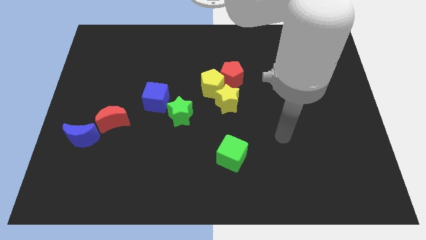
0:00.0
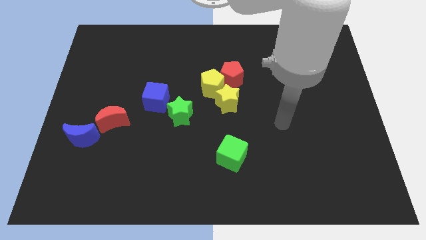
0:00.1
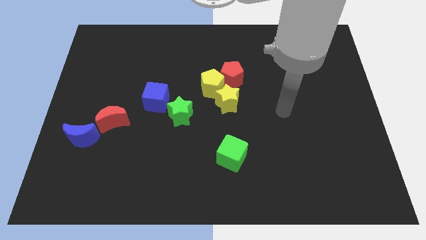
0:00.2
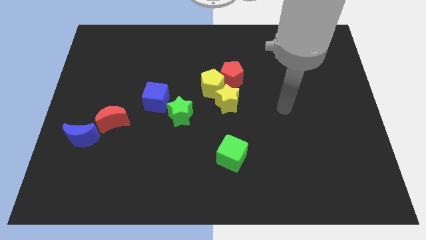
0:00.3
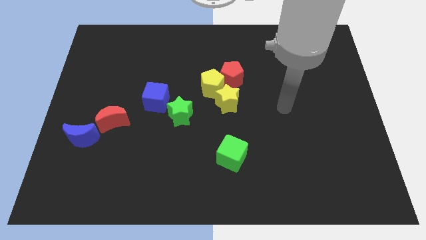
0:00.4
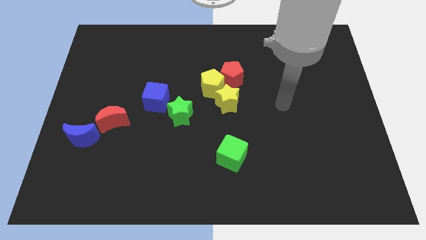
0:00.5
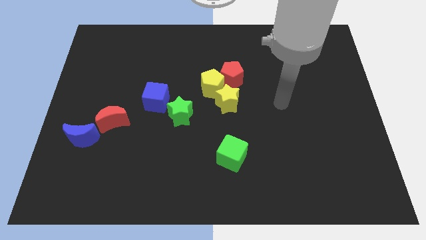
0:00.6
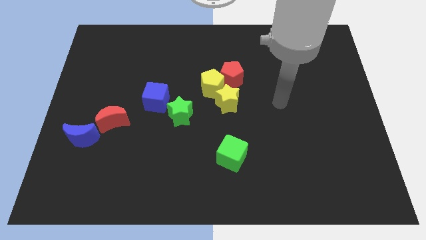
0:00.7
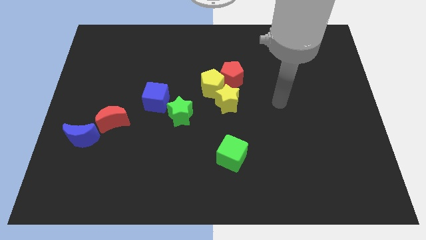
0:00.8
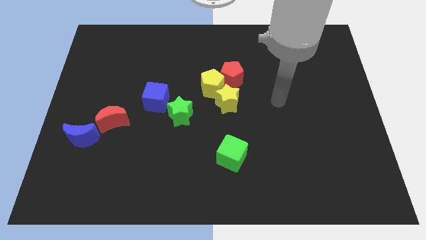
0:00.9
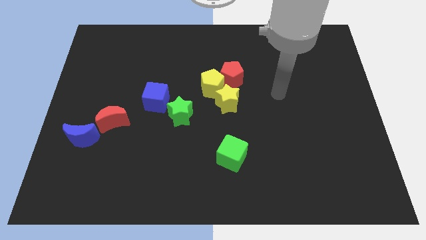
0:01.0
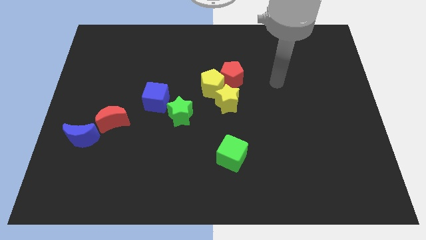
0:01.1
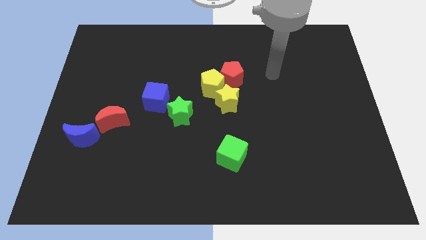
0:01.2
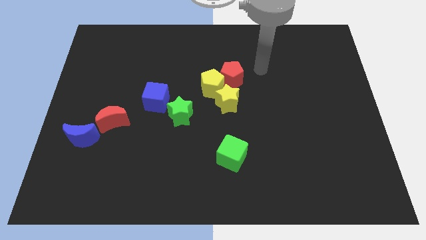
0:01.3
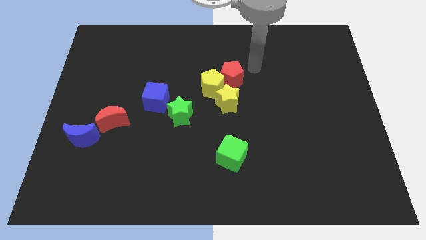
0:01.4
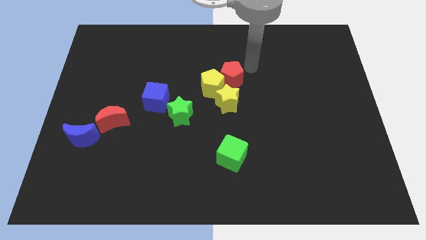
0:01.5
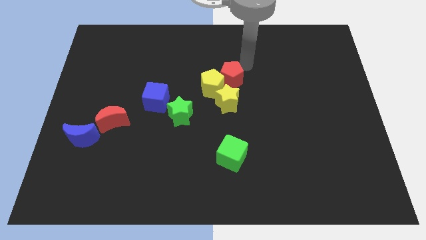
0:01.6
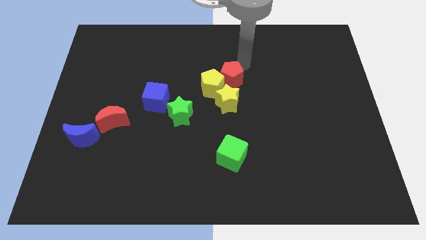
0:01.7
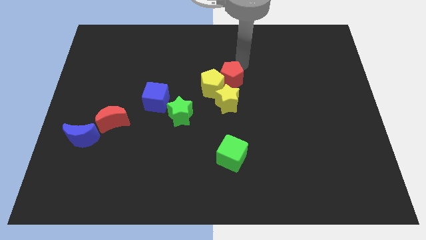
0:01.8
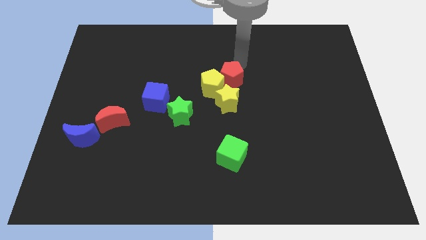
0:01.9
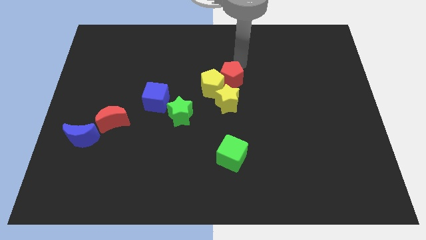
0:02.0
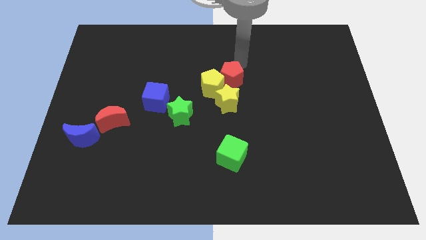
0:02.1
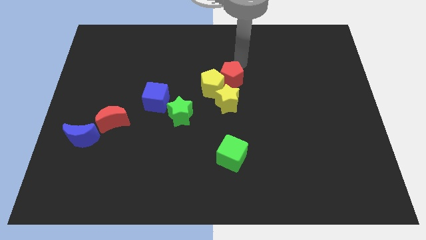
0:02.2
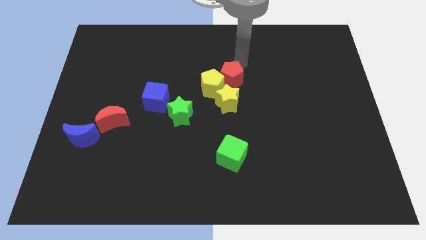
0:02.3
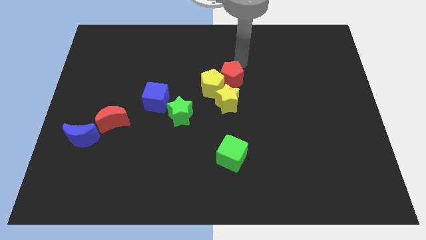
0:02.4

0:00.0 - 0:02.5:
move your arm top to the red pentagon

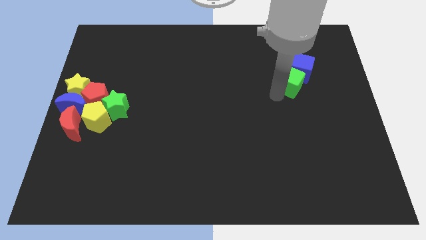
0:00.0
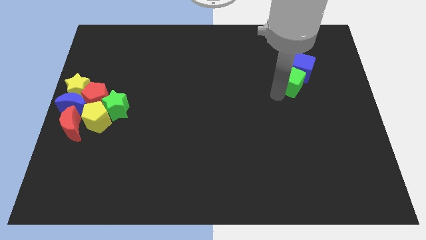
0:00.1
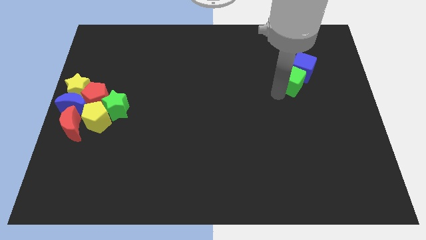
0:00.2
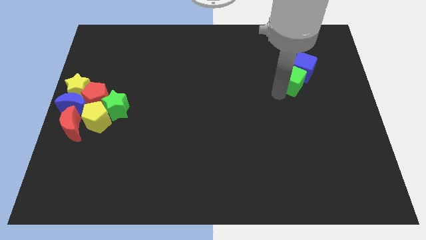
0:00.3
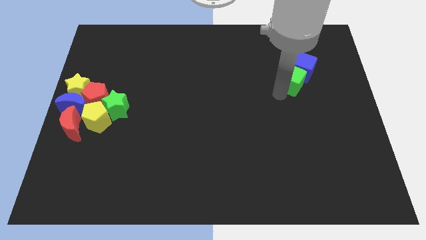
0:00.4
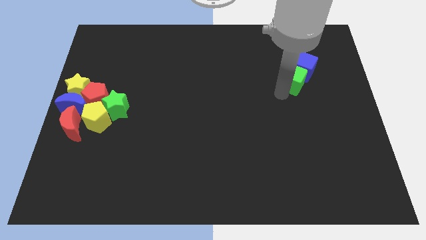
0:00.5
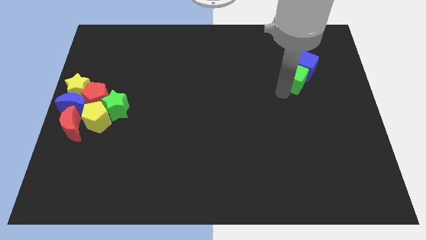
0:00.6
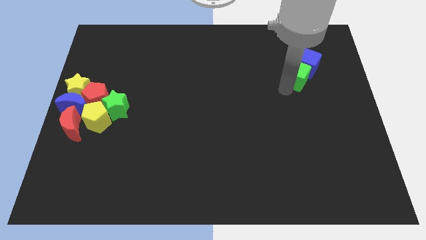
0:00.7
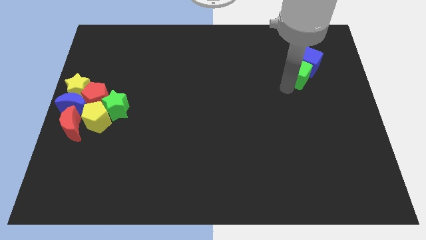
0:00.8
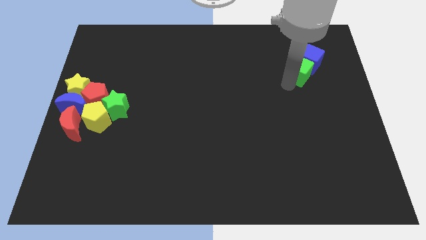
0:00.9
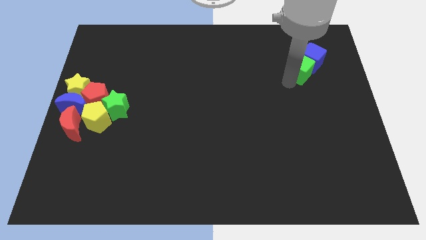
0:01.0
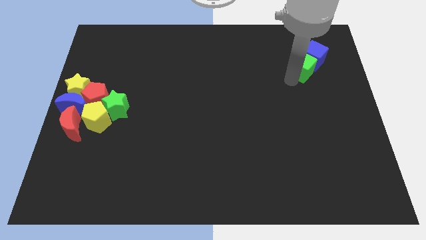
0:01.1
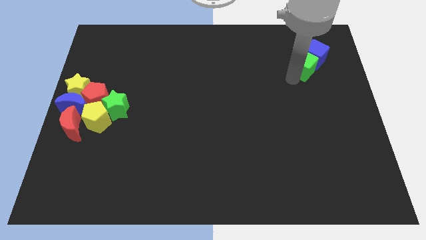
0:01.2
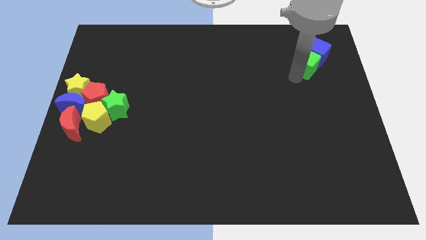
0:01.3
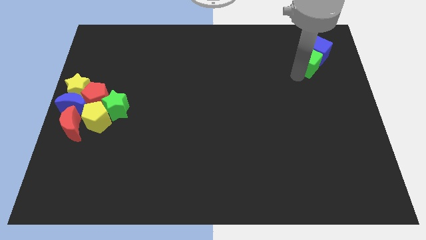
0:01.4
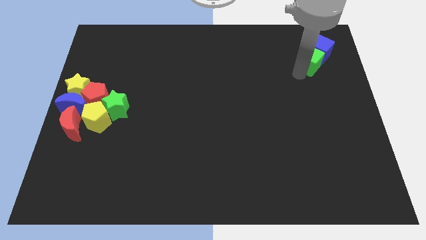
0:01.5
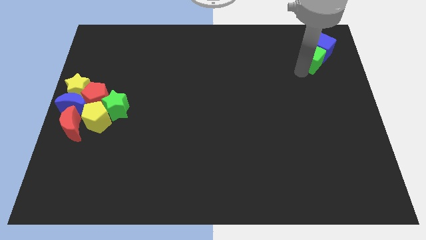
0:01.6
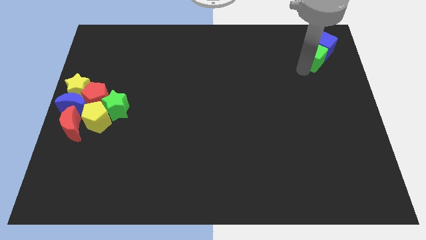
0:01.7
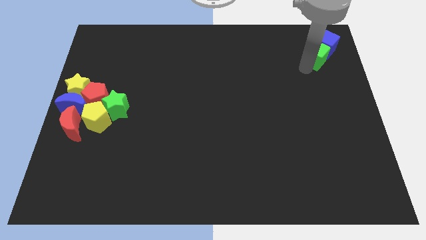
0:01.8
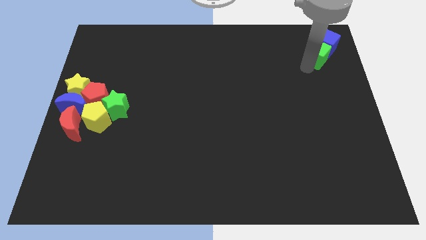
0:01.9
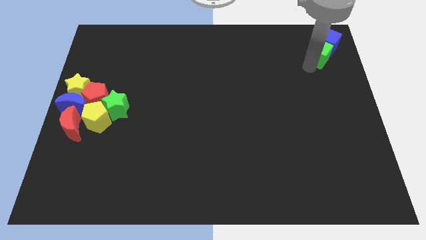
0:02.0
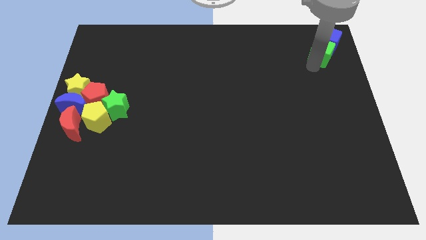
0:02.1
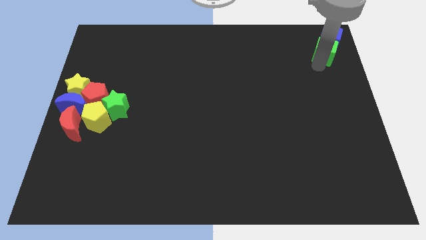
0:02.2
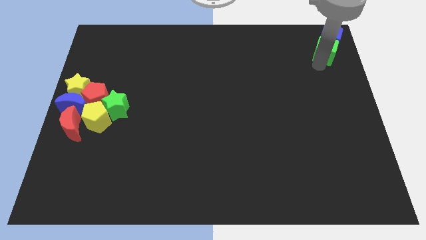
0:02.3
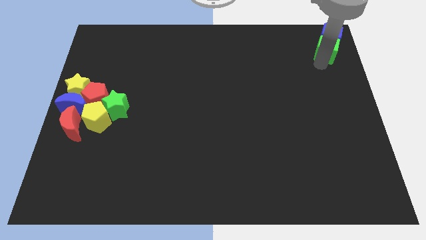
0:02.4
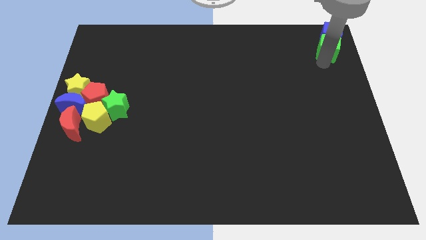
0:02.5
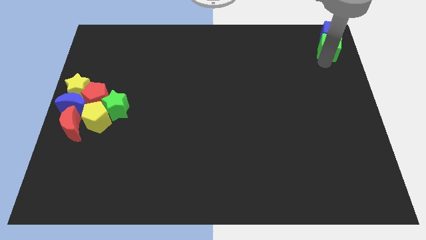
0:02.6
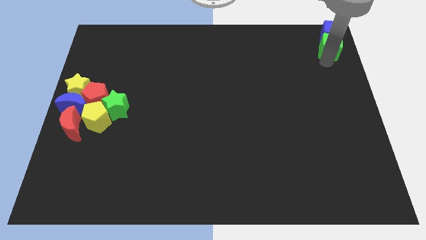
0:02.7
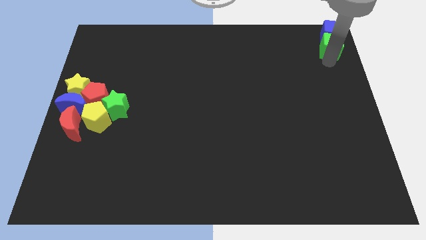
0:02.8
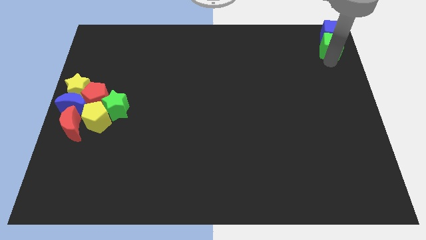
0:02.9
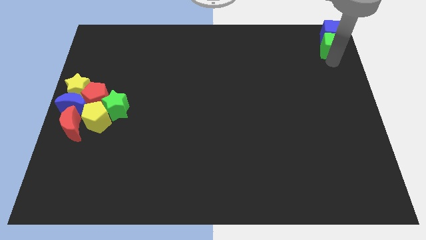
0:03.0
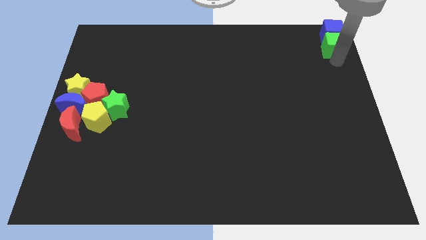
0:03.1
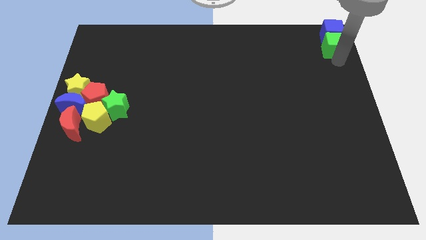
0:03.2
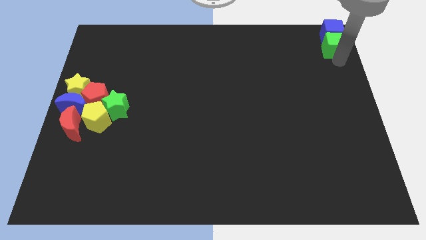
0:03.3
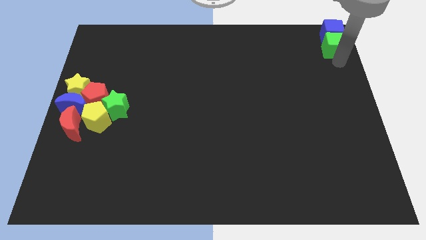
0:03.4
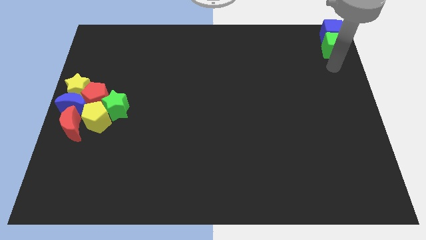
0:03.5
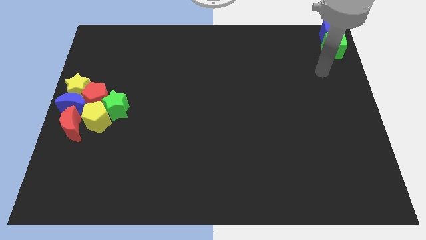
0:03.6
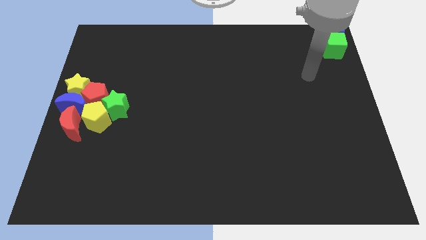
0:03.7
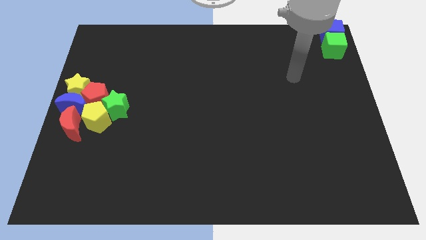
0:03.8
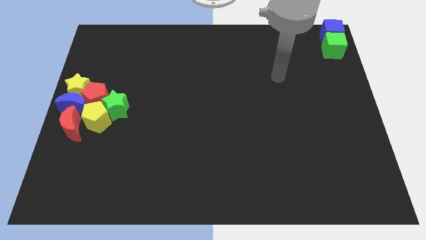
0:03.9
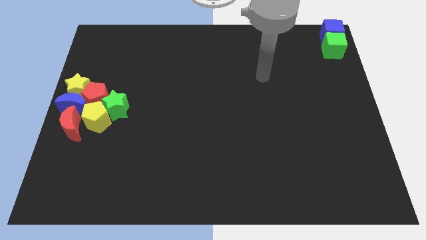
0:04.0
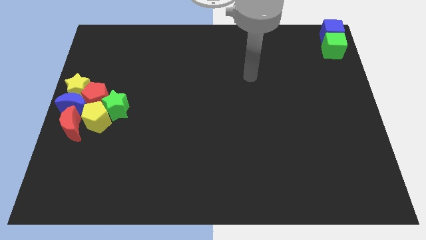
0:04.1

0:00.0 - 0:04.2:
place both the green and blue cubes on the top right of the board

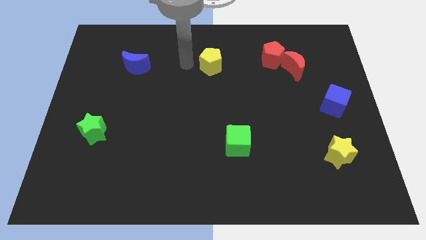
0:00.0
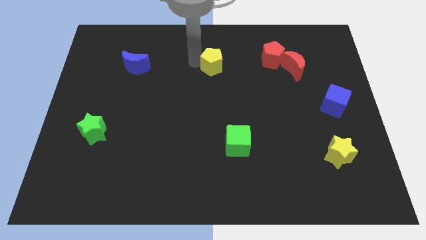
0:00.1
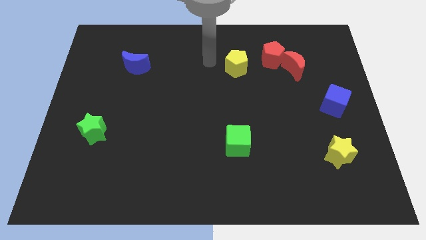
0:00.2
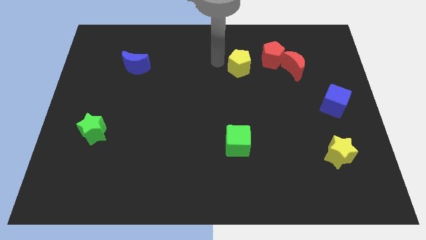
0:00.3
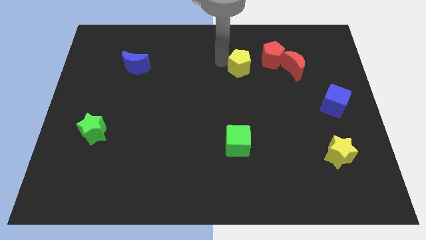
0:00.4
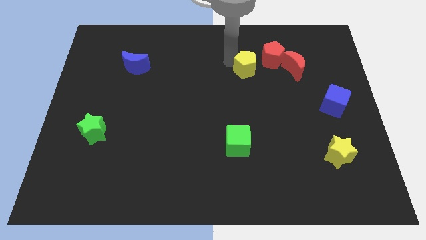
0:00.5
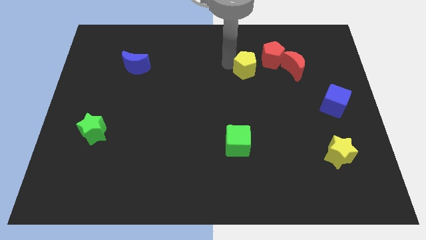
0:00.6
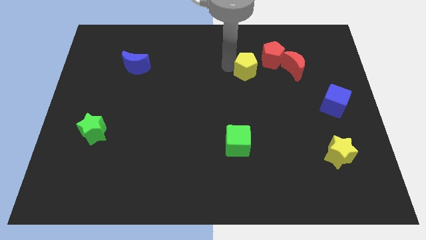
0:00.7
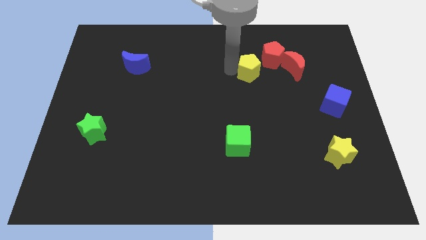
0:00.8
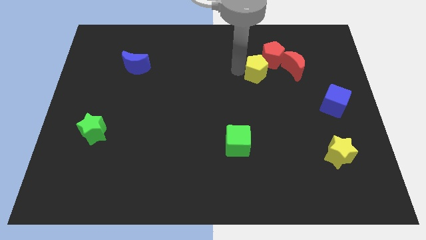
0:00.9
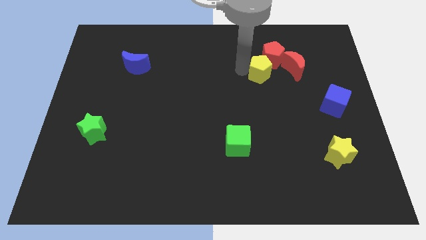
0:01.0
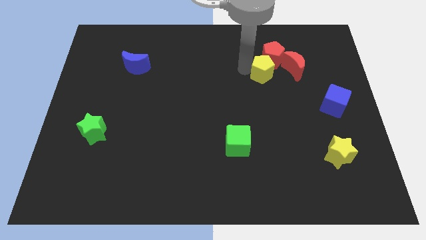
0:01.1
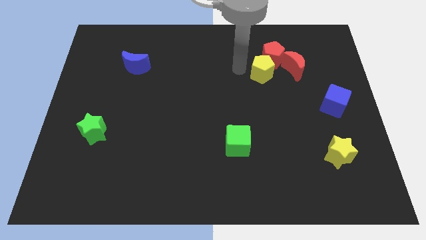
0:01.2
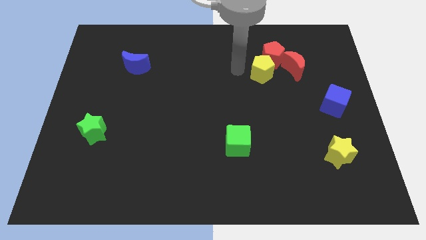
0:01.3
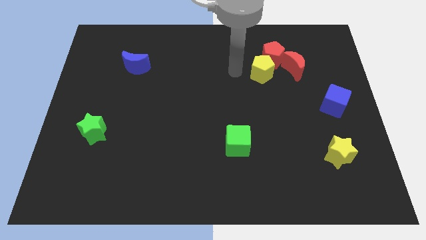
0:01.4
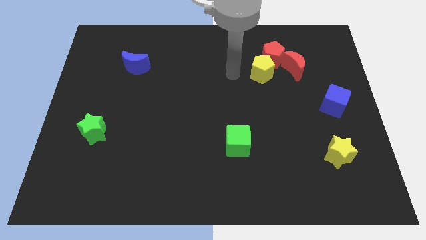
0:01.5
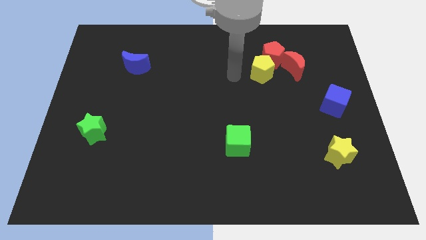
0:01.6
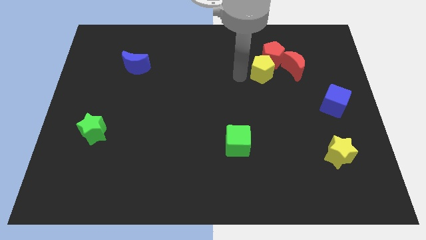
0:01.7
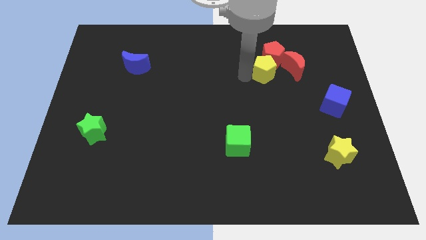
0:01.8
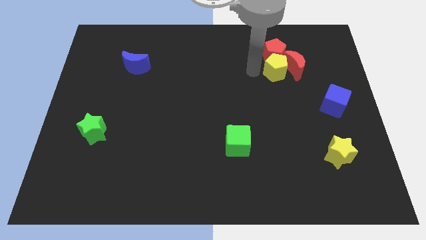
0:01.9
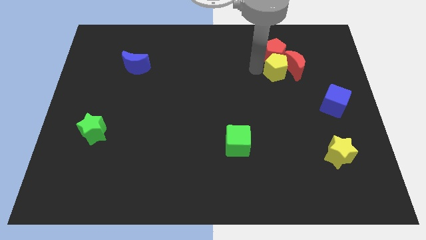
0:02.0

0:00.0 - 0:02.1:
push the yellow pentagon into the red pentagon

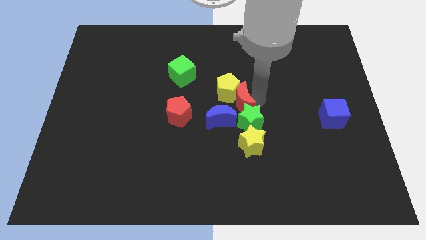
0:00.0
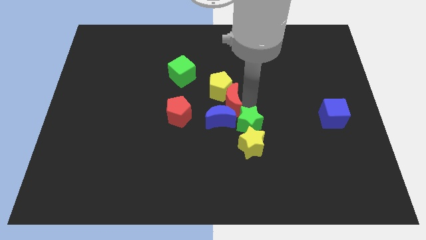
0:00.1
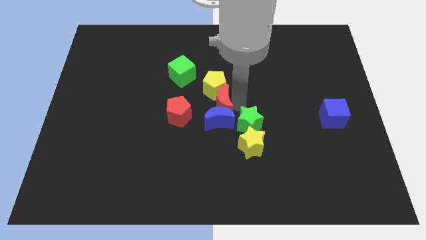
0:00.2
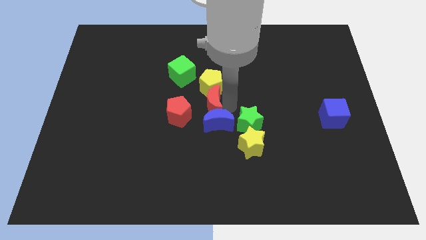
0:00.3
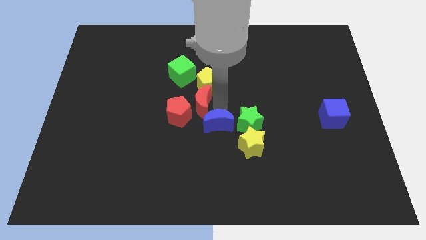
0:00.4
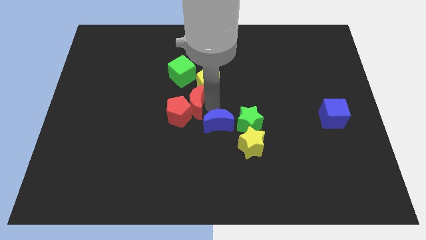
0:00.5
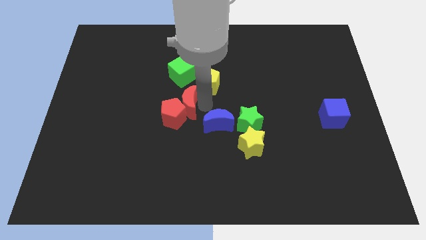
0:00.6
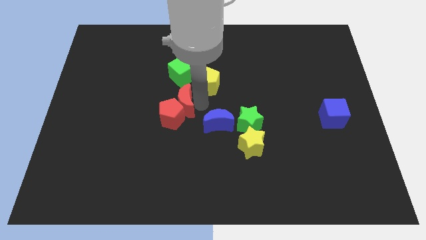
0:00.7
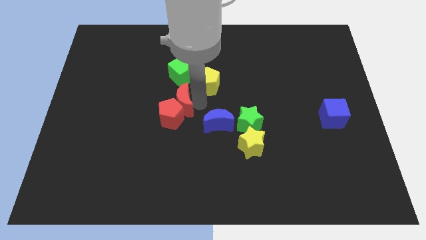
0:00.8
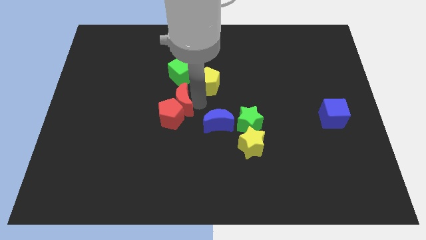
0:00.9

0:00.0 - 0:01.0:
push the red crescent to the bottom of the green cube on the board
